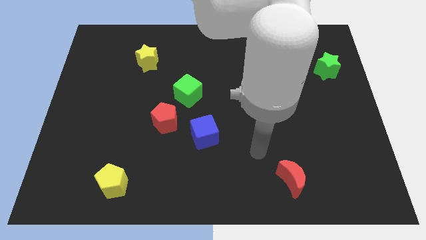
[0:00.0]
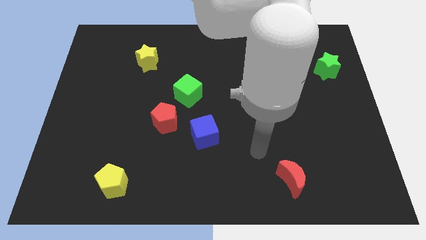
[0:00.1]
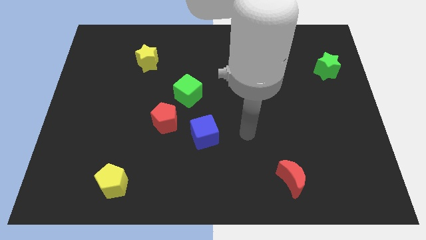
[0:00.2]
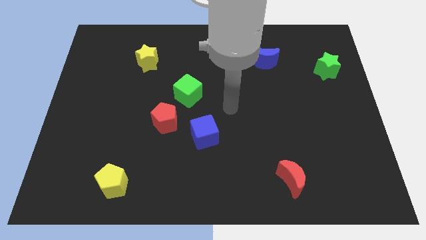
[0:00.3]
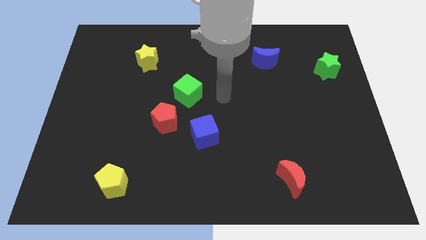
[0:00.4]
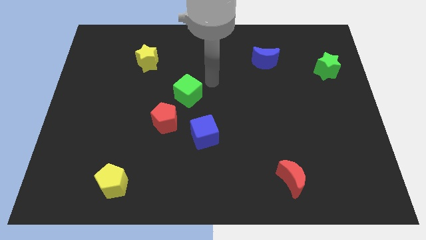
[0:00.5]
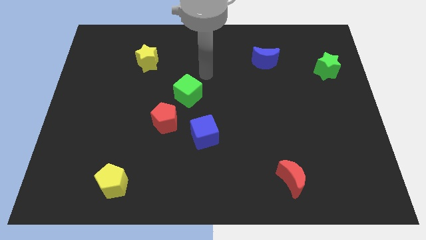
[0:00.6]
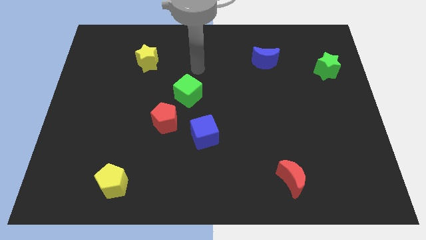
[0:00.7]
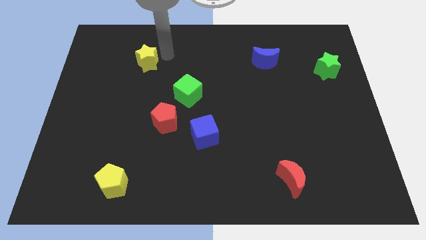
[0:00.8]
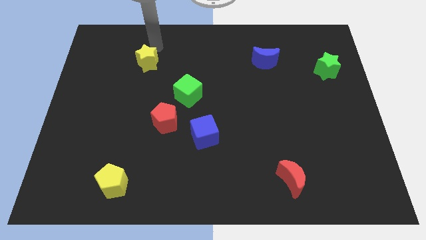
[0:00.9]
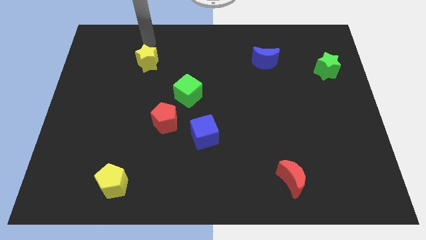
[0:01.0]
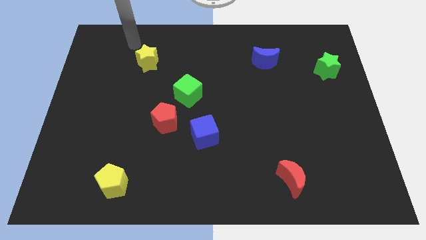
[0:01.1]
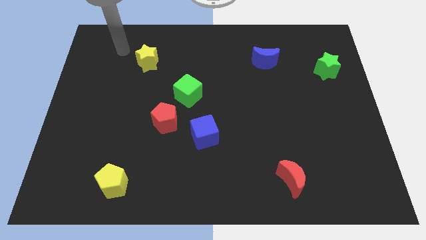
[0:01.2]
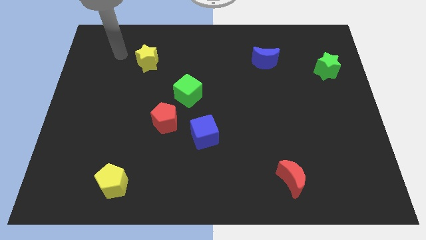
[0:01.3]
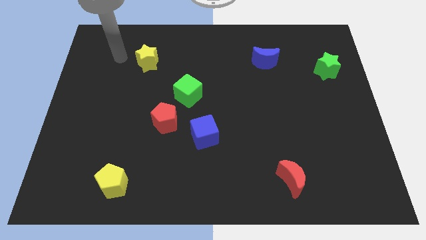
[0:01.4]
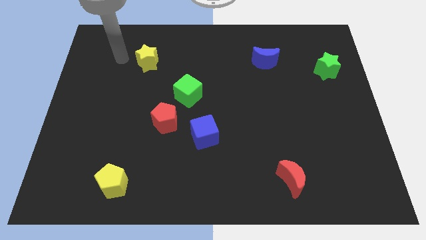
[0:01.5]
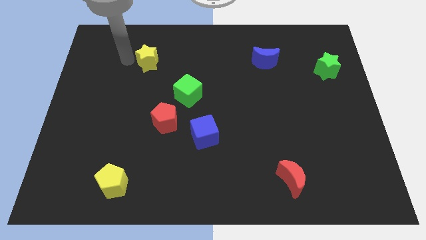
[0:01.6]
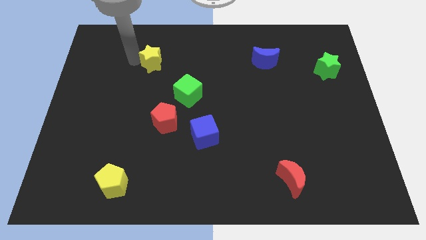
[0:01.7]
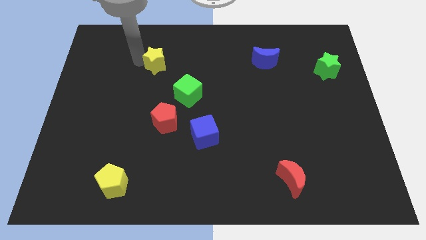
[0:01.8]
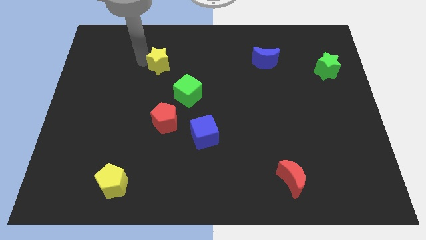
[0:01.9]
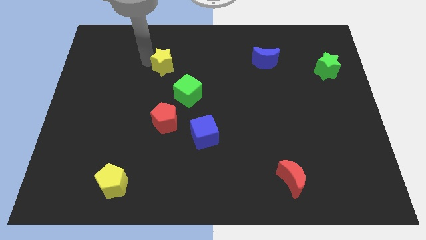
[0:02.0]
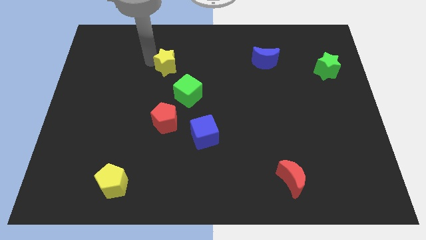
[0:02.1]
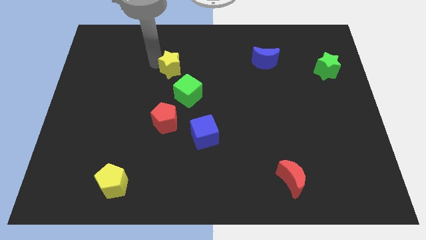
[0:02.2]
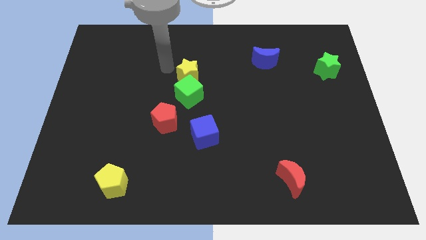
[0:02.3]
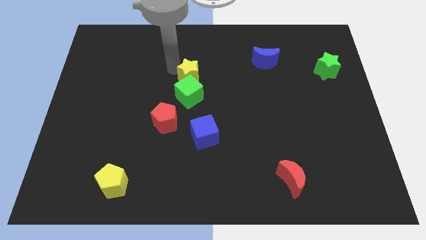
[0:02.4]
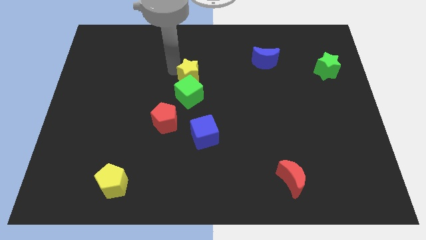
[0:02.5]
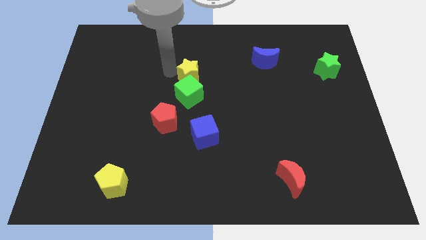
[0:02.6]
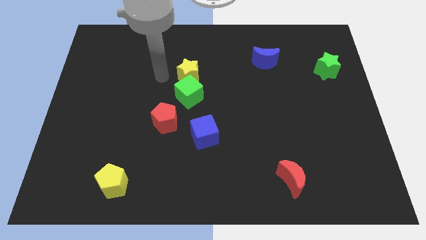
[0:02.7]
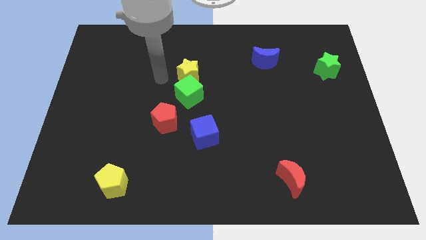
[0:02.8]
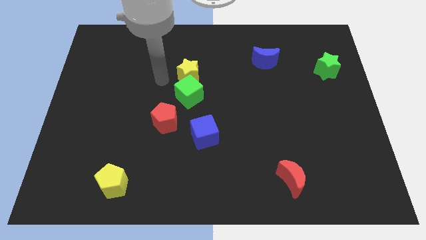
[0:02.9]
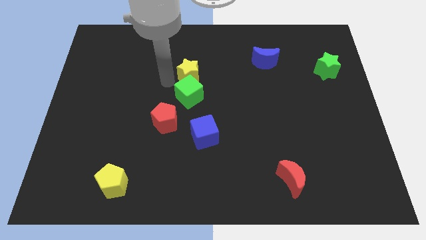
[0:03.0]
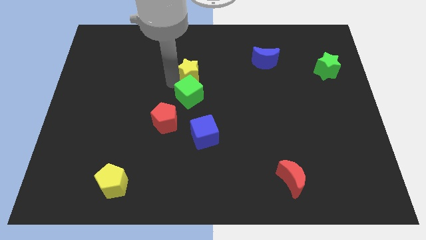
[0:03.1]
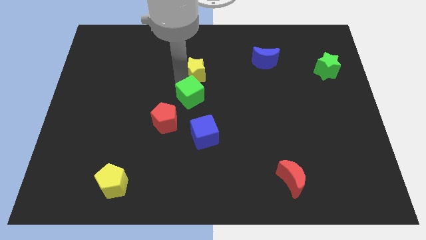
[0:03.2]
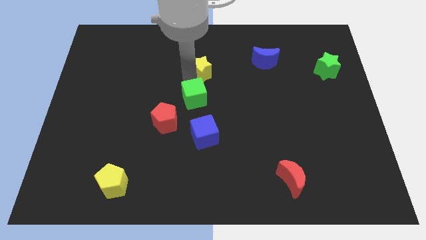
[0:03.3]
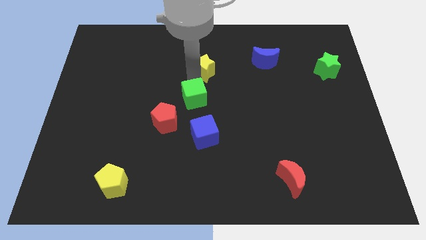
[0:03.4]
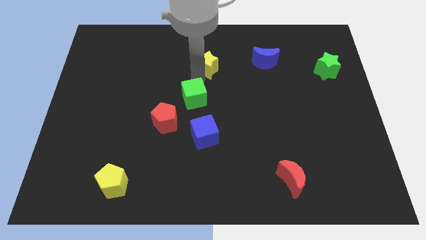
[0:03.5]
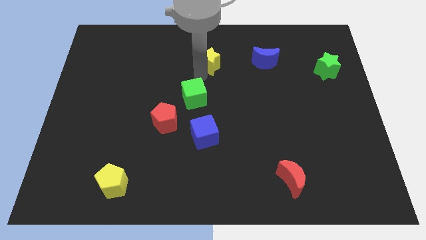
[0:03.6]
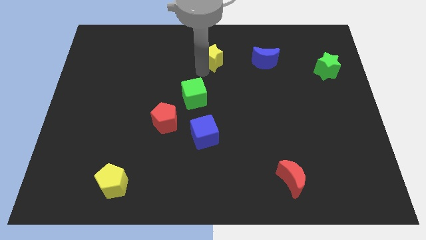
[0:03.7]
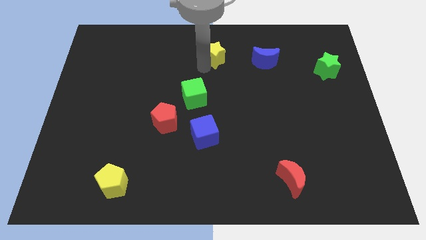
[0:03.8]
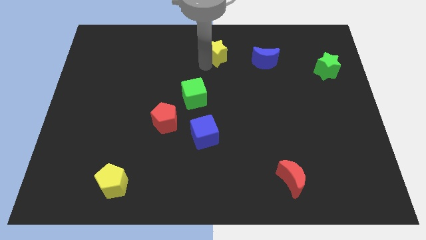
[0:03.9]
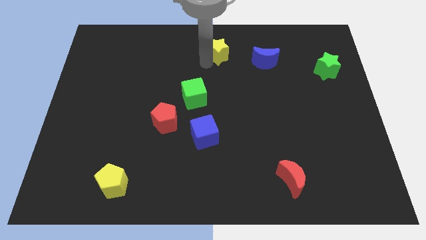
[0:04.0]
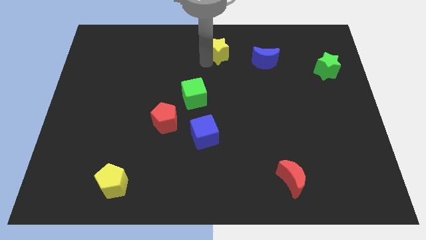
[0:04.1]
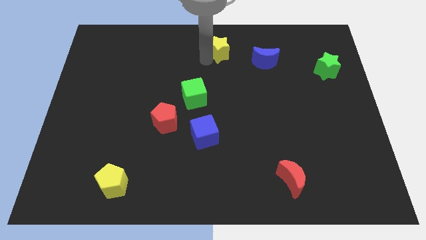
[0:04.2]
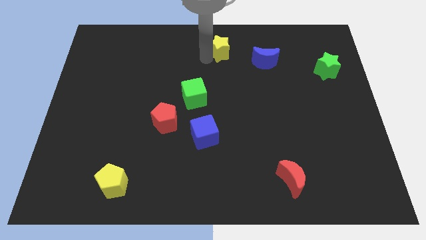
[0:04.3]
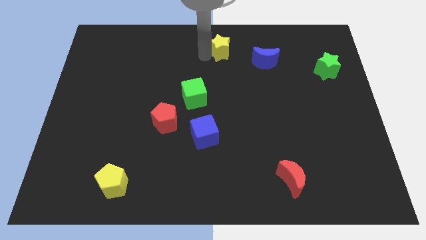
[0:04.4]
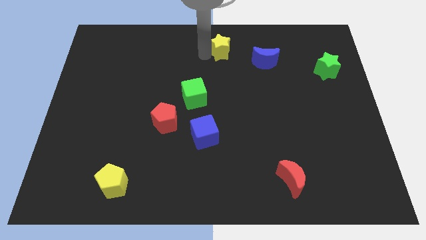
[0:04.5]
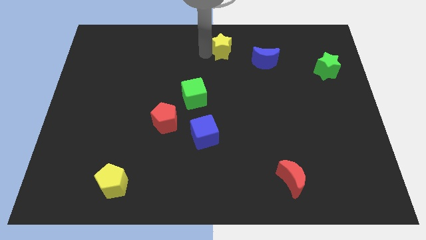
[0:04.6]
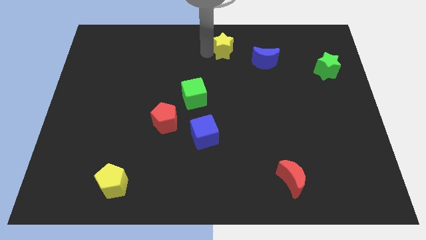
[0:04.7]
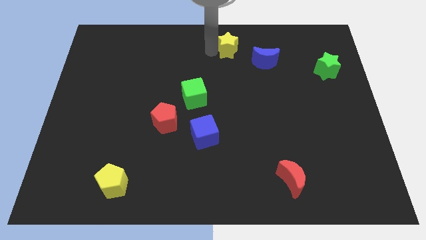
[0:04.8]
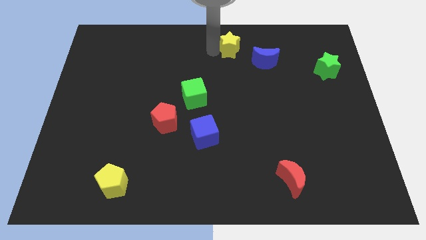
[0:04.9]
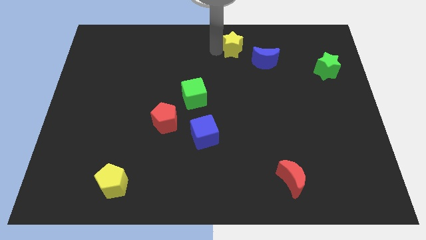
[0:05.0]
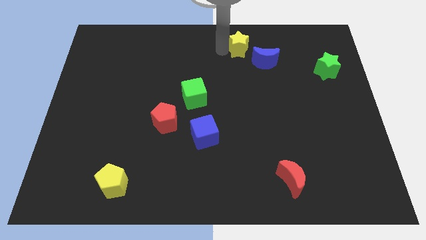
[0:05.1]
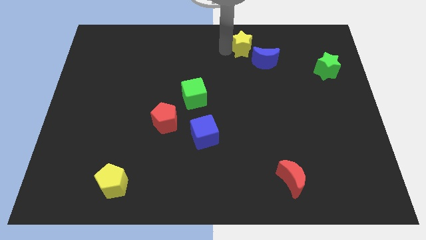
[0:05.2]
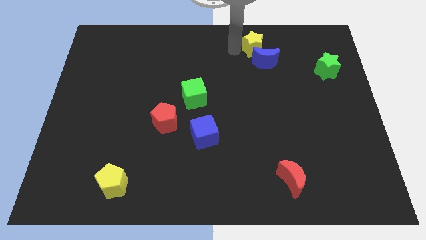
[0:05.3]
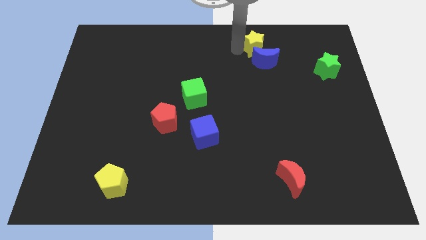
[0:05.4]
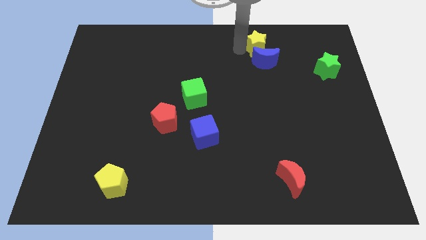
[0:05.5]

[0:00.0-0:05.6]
put the yellow star towards the blue moon

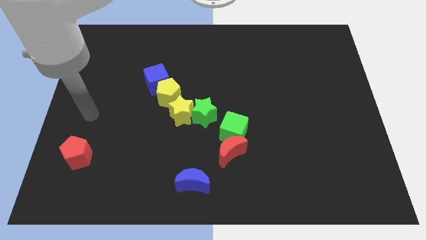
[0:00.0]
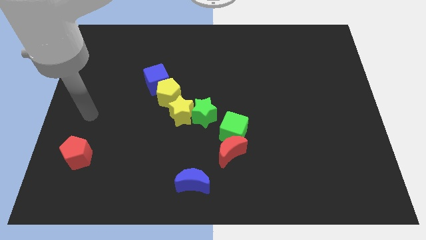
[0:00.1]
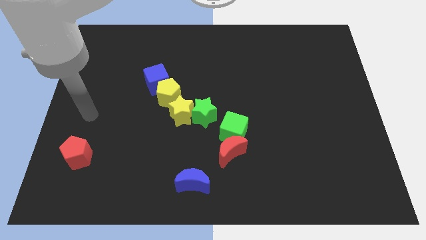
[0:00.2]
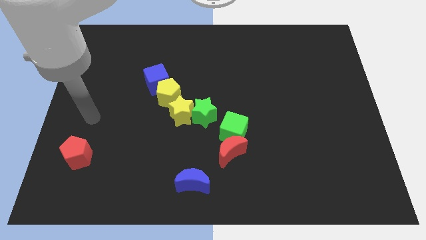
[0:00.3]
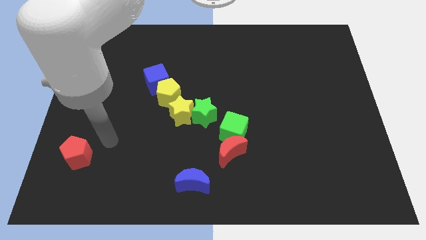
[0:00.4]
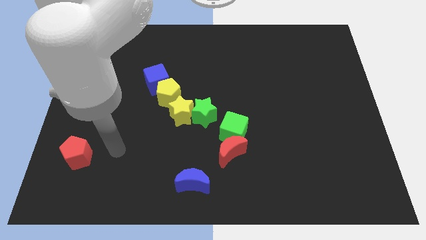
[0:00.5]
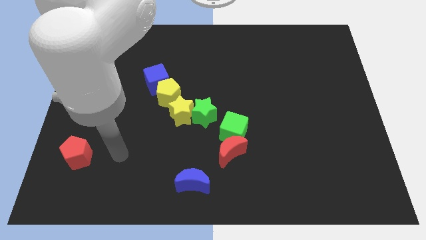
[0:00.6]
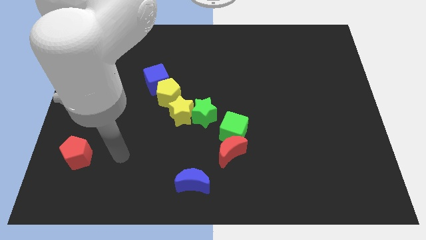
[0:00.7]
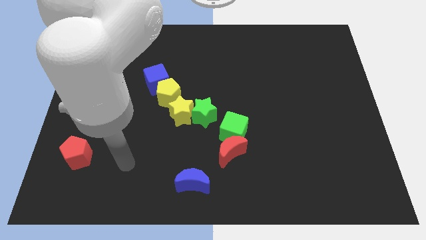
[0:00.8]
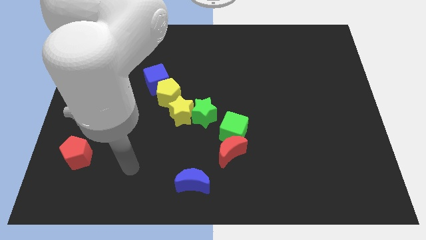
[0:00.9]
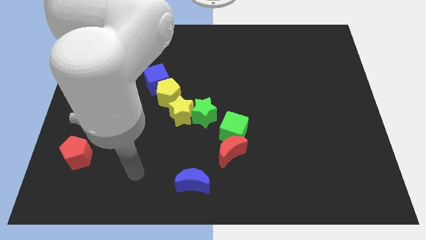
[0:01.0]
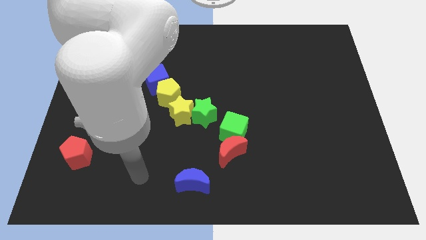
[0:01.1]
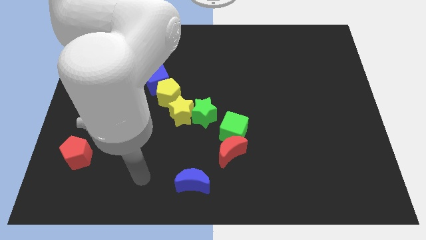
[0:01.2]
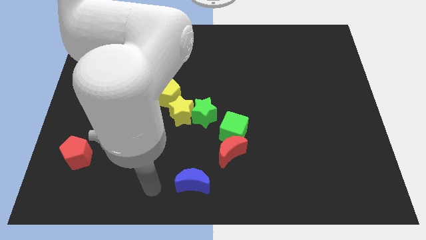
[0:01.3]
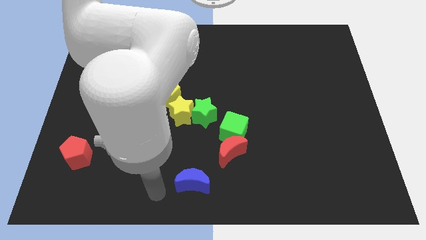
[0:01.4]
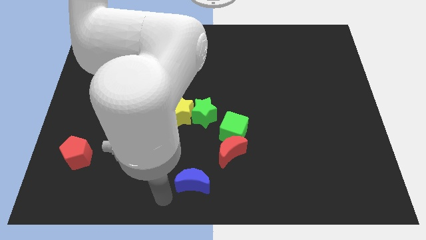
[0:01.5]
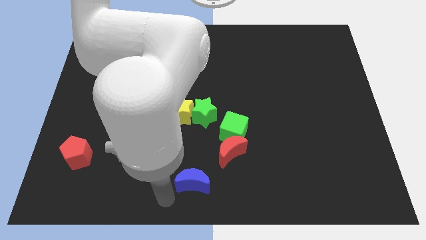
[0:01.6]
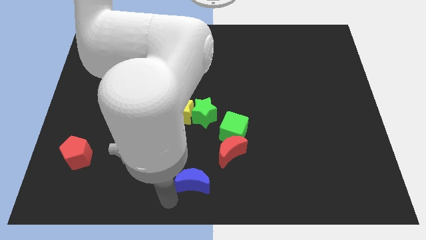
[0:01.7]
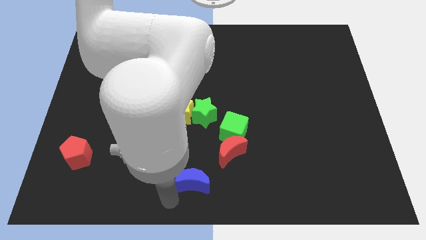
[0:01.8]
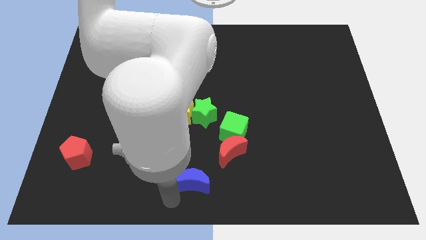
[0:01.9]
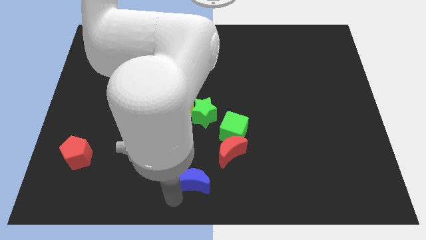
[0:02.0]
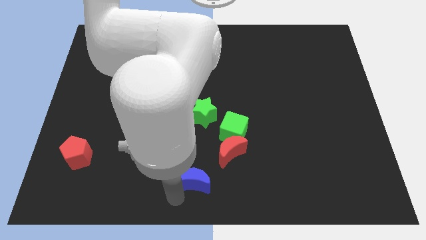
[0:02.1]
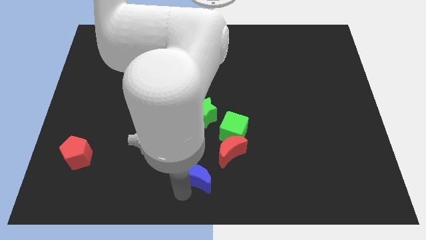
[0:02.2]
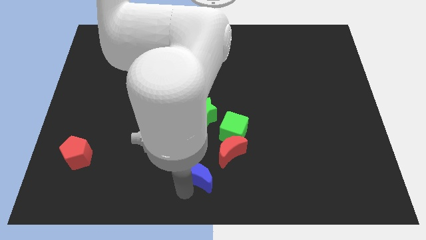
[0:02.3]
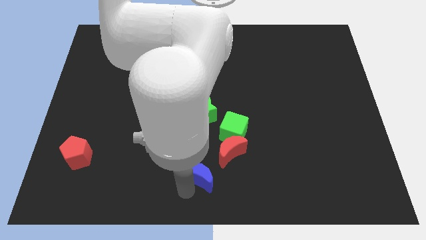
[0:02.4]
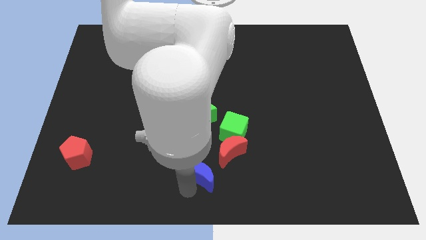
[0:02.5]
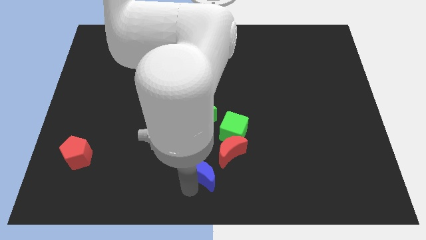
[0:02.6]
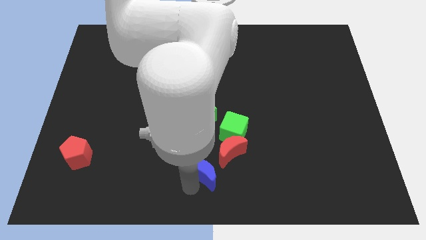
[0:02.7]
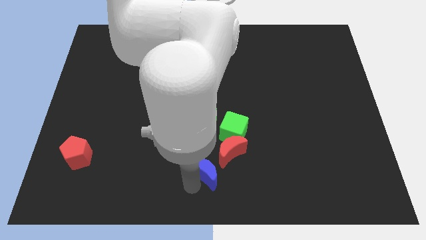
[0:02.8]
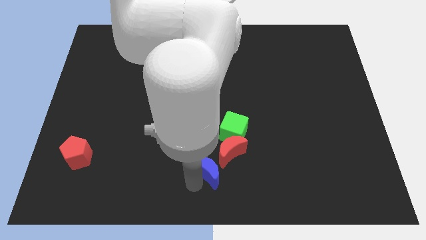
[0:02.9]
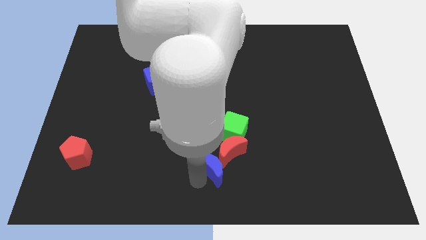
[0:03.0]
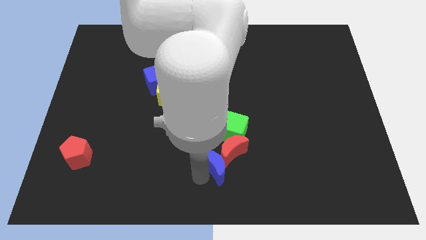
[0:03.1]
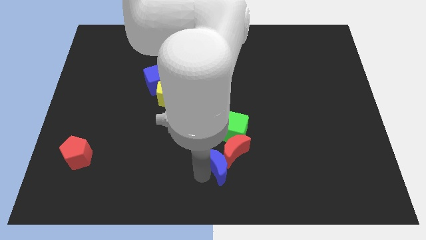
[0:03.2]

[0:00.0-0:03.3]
slide the blue moon to the red moon
